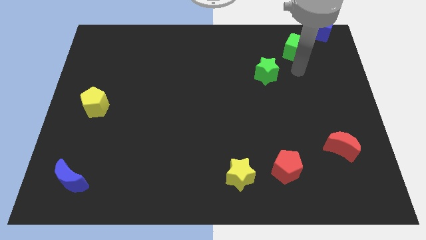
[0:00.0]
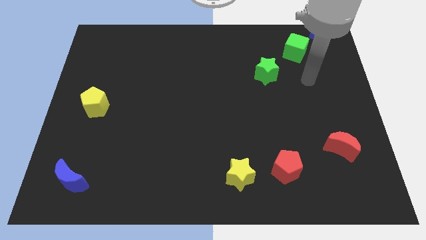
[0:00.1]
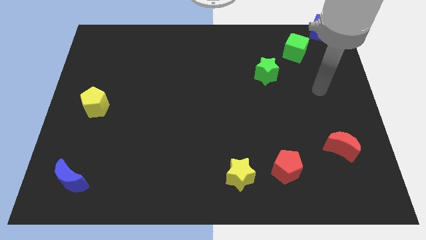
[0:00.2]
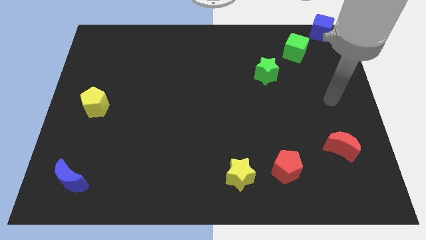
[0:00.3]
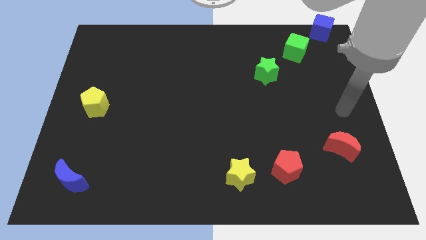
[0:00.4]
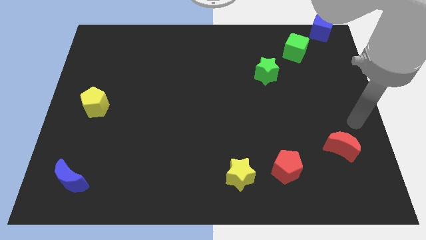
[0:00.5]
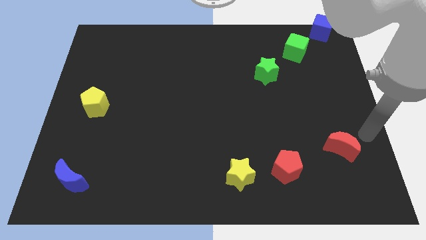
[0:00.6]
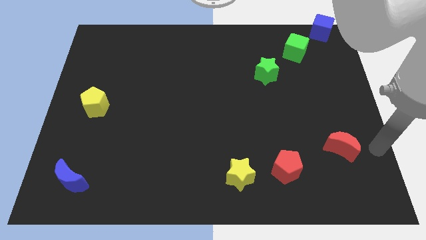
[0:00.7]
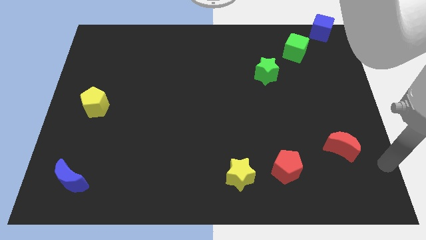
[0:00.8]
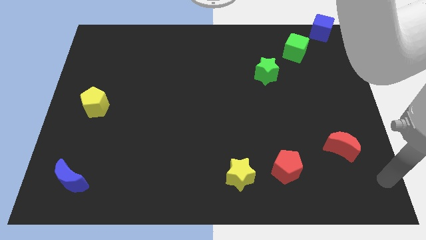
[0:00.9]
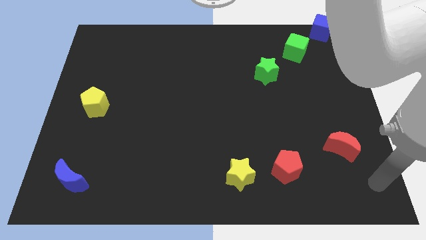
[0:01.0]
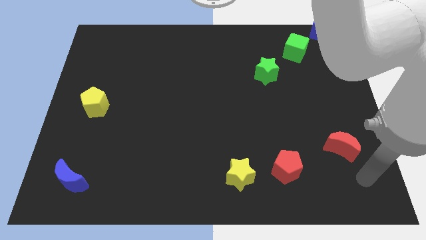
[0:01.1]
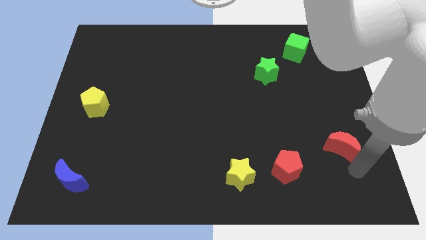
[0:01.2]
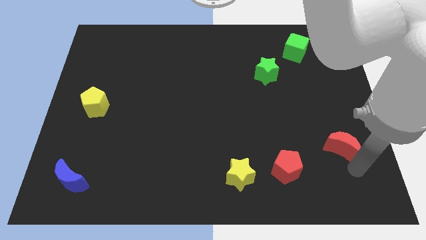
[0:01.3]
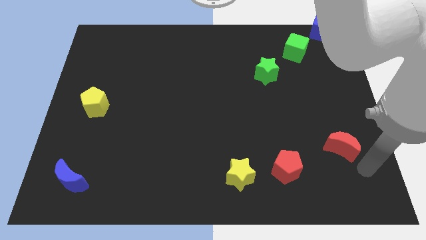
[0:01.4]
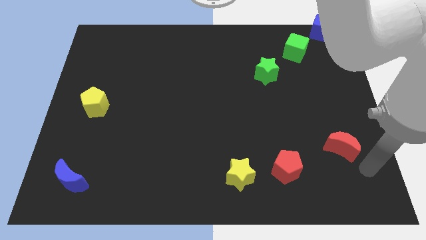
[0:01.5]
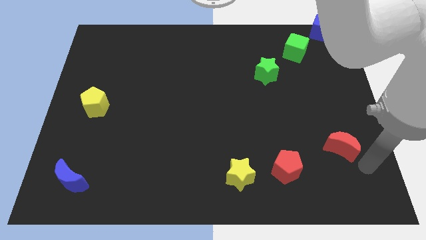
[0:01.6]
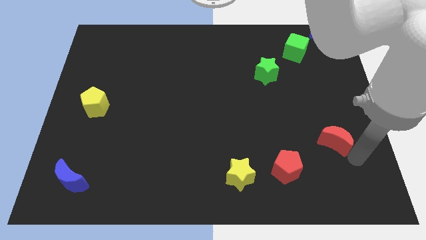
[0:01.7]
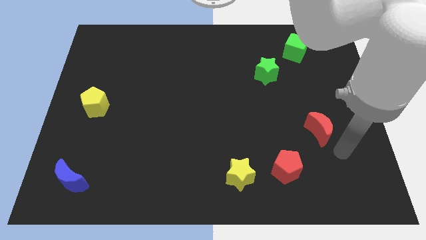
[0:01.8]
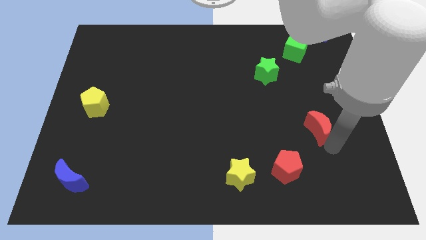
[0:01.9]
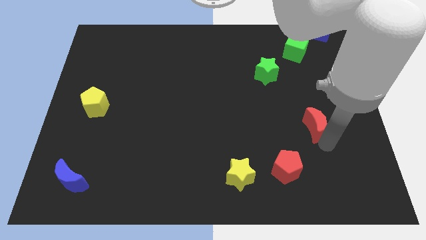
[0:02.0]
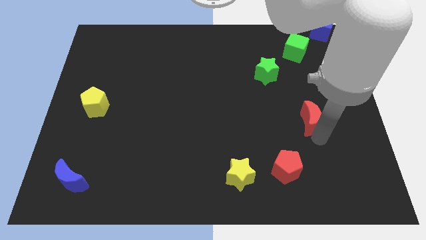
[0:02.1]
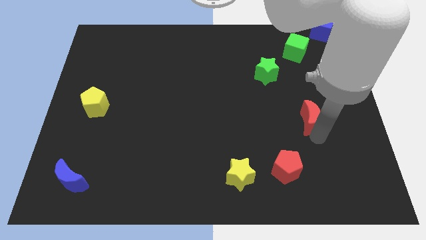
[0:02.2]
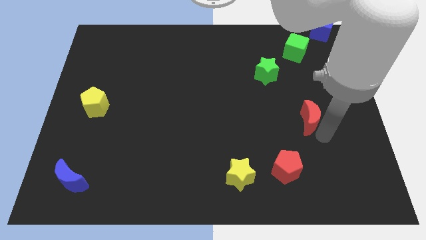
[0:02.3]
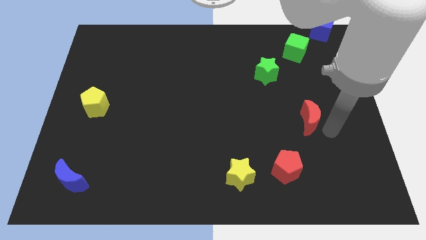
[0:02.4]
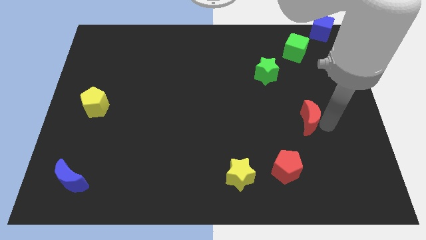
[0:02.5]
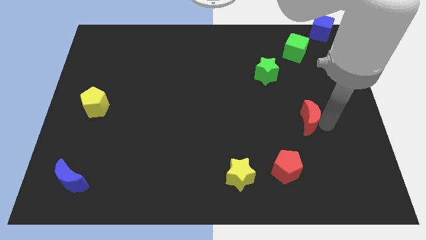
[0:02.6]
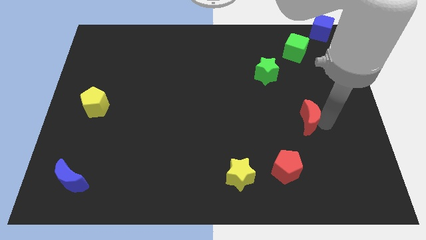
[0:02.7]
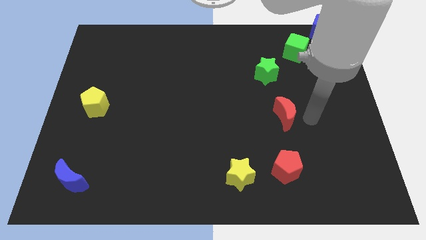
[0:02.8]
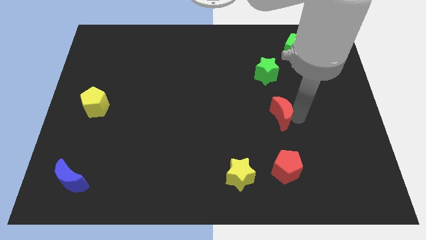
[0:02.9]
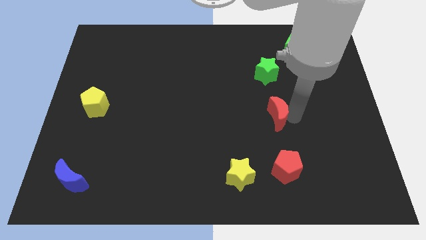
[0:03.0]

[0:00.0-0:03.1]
place the red crescent in between green star and red pentagon

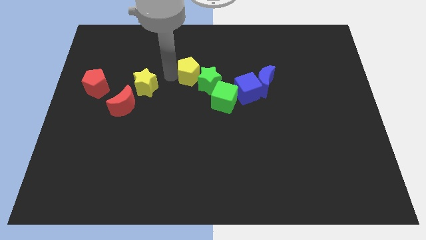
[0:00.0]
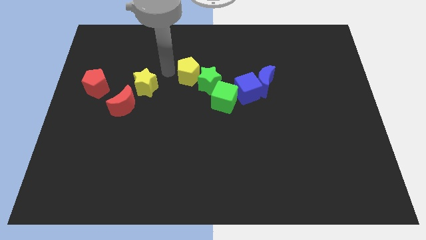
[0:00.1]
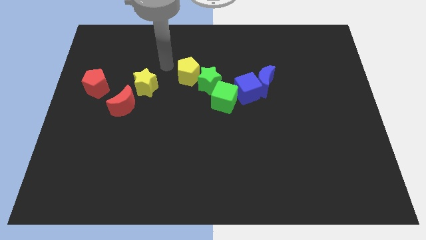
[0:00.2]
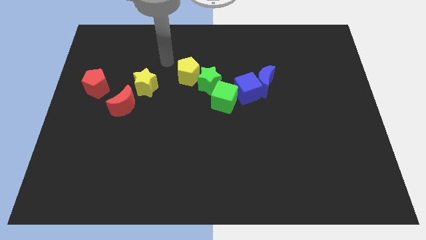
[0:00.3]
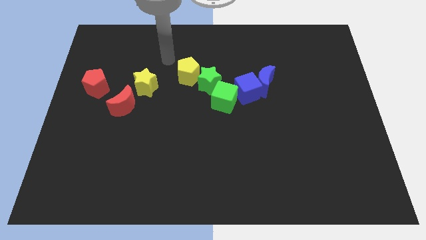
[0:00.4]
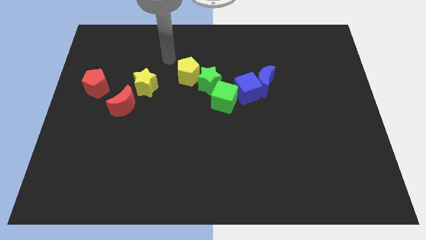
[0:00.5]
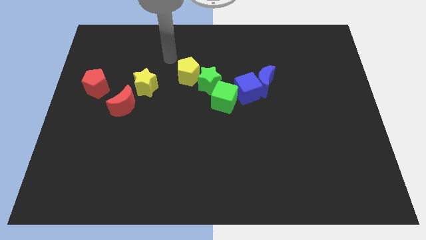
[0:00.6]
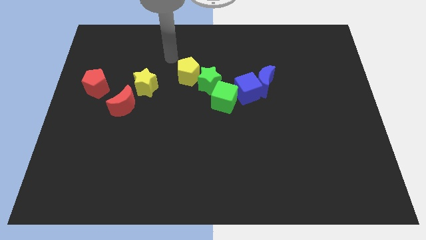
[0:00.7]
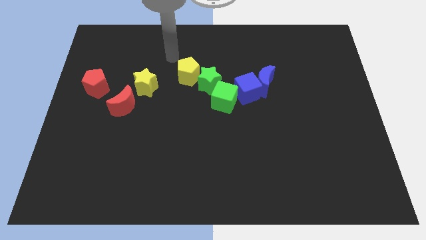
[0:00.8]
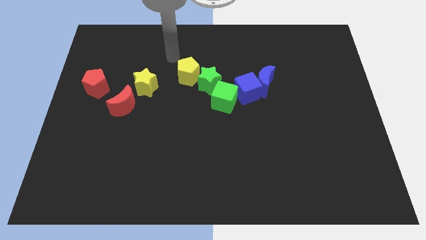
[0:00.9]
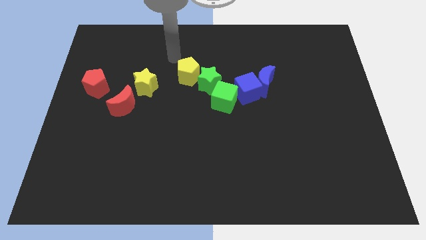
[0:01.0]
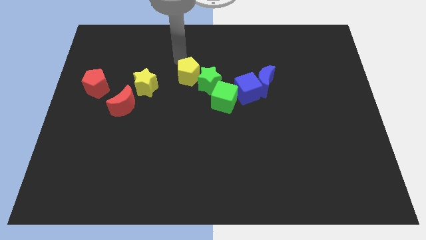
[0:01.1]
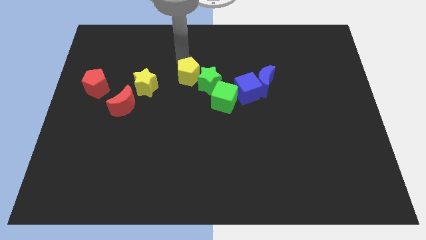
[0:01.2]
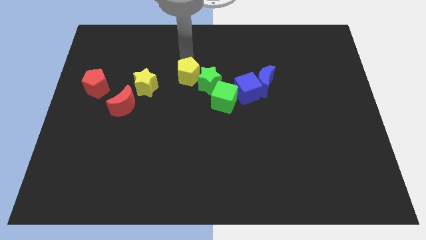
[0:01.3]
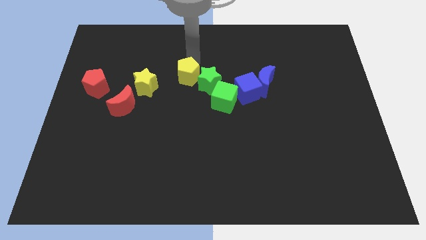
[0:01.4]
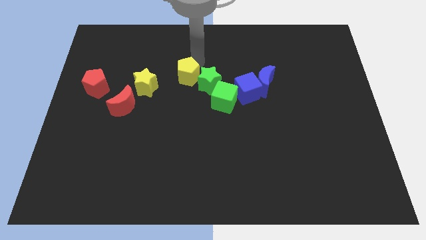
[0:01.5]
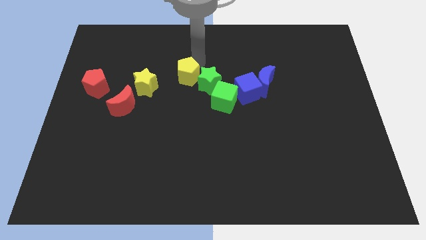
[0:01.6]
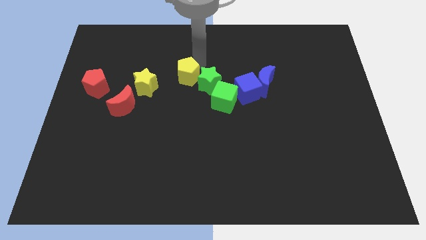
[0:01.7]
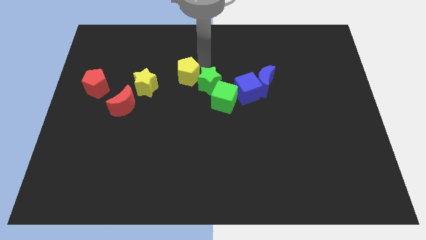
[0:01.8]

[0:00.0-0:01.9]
move your arm away from the yellow pentagon

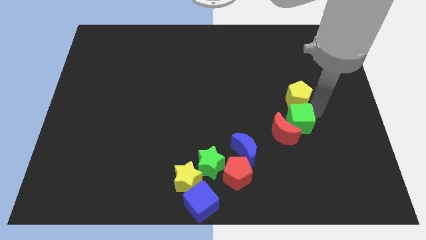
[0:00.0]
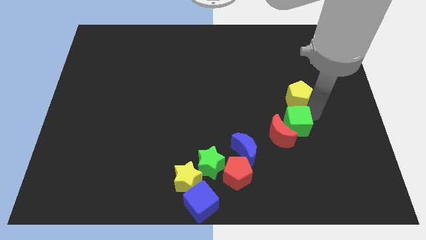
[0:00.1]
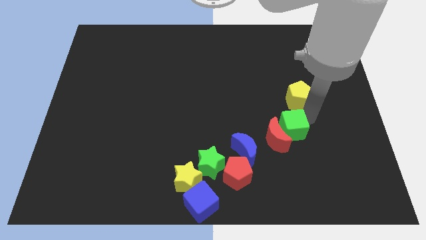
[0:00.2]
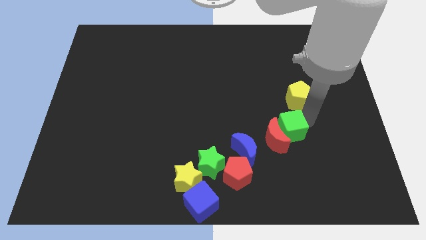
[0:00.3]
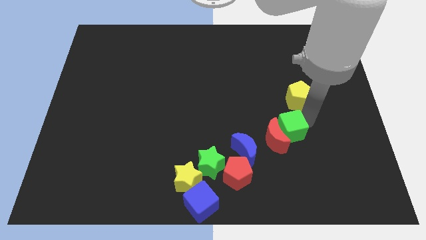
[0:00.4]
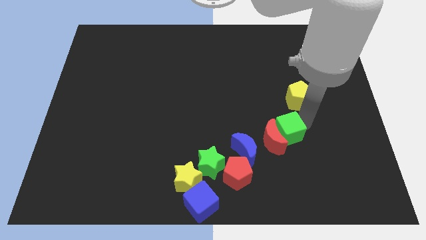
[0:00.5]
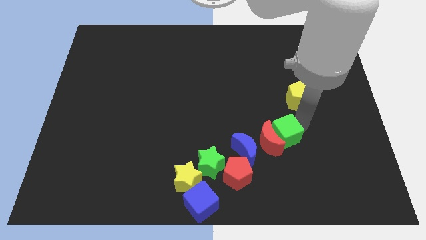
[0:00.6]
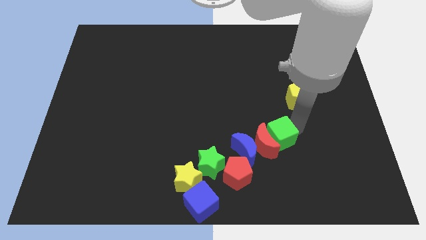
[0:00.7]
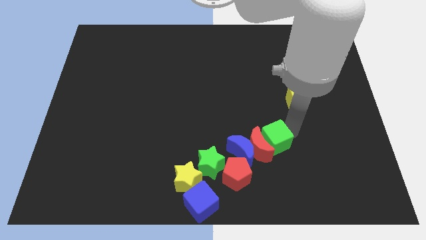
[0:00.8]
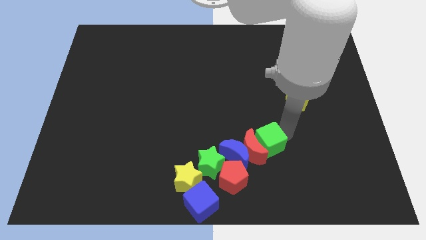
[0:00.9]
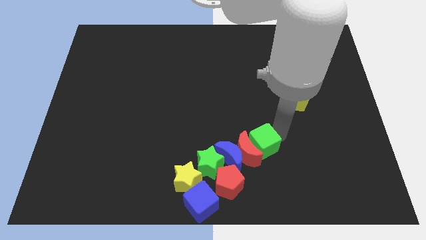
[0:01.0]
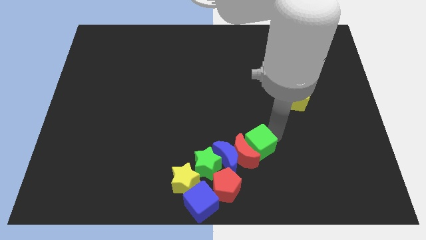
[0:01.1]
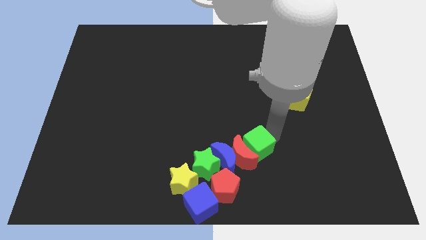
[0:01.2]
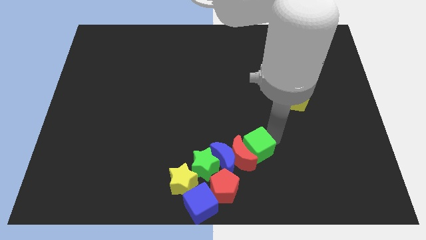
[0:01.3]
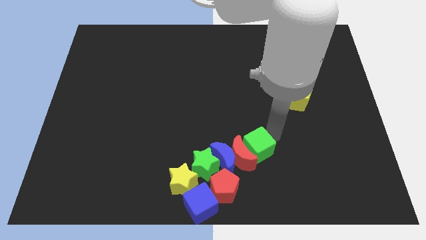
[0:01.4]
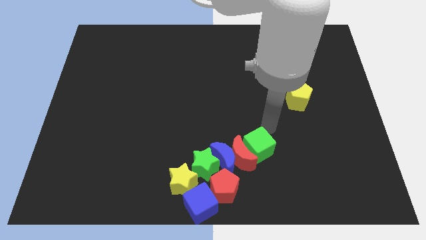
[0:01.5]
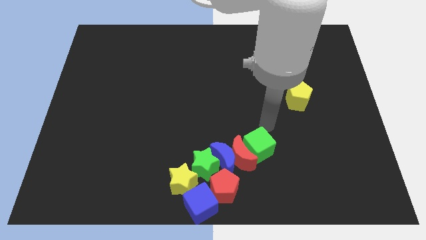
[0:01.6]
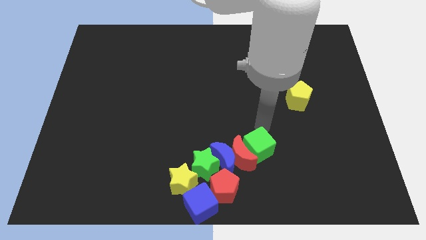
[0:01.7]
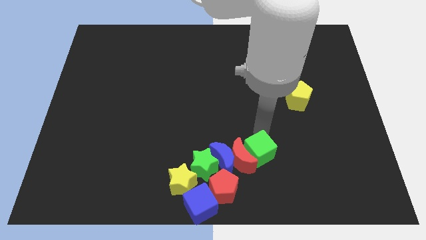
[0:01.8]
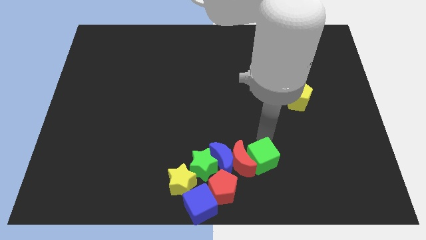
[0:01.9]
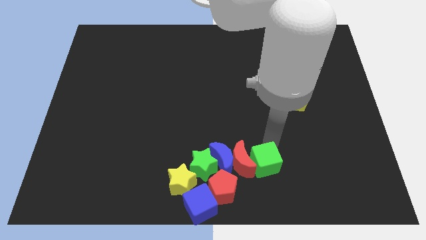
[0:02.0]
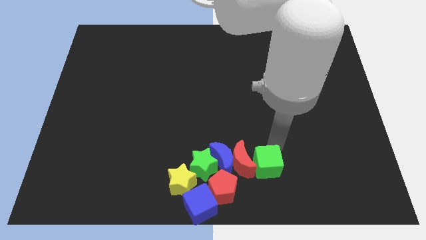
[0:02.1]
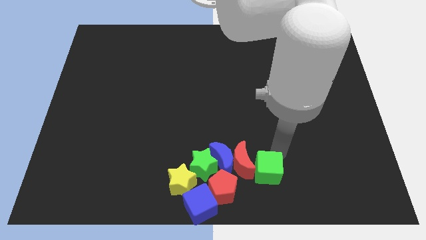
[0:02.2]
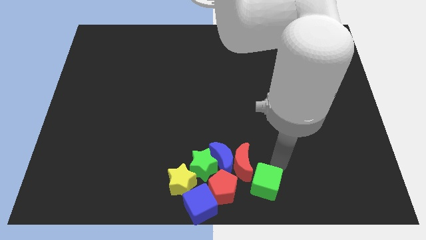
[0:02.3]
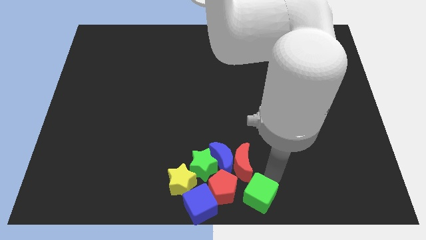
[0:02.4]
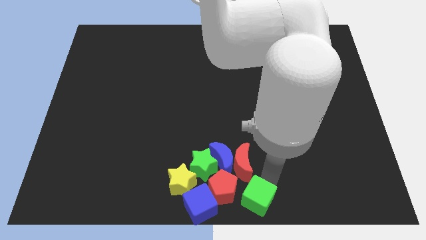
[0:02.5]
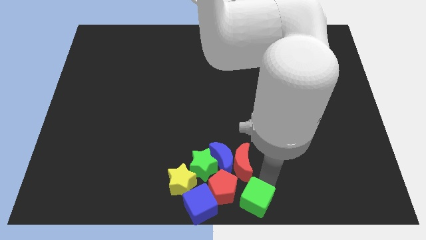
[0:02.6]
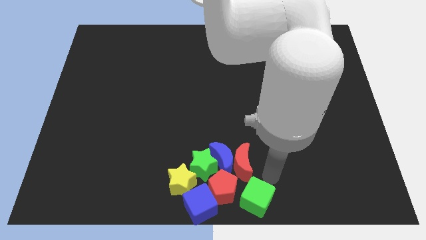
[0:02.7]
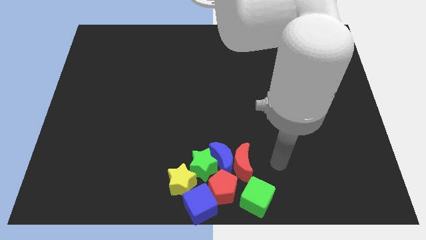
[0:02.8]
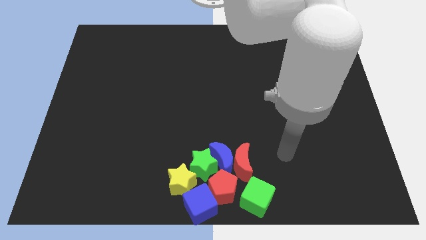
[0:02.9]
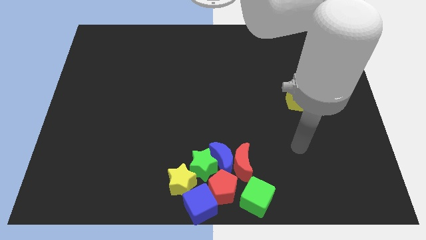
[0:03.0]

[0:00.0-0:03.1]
push the green cube along with the red crescent into the group of blocks

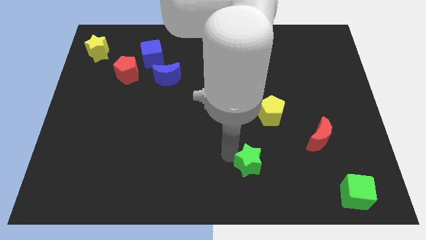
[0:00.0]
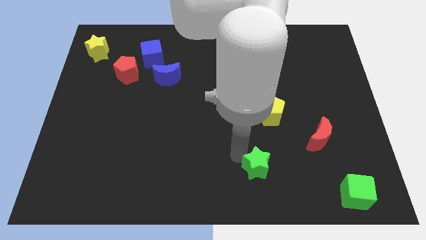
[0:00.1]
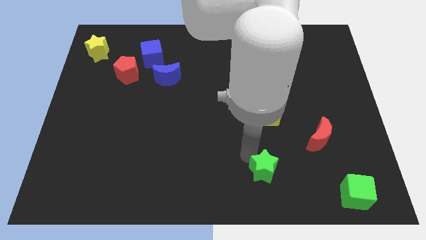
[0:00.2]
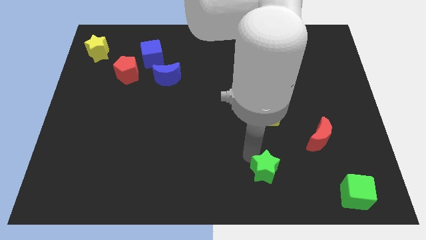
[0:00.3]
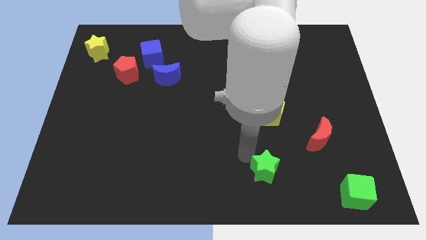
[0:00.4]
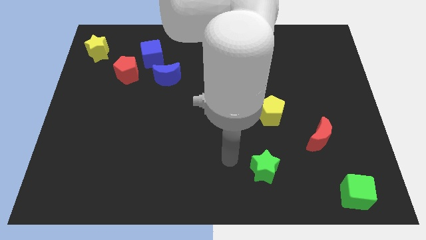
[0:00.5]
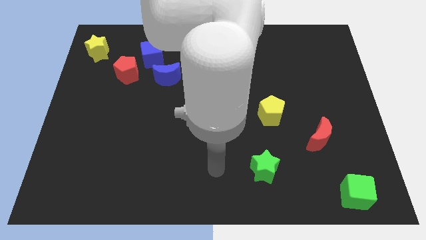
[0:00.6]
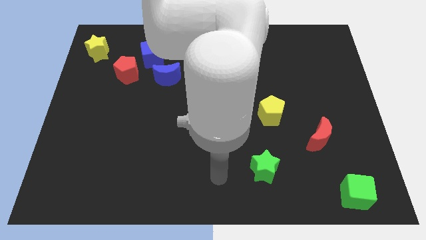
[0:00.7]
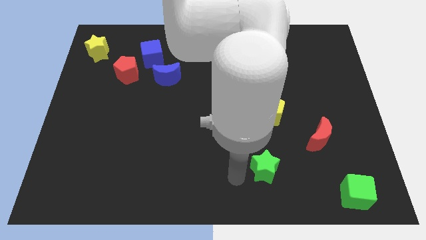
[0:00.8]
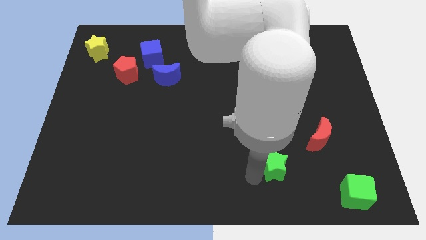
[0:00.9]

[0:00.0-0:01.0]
place green star to the bottom of yellow pentagon
